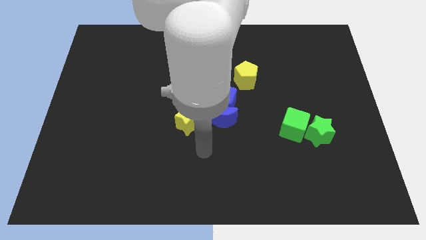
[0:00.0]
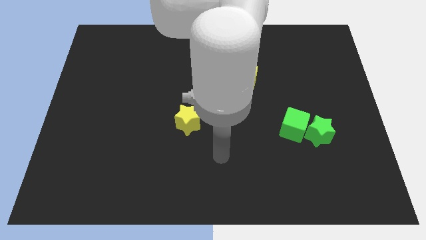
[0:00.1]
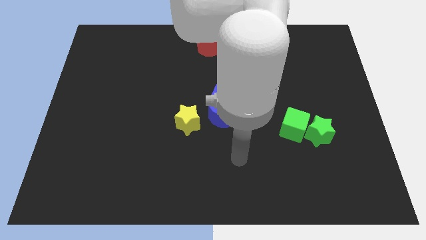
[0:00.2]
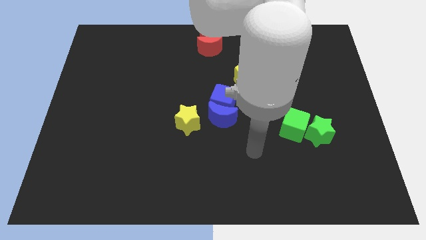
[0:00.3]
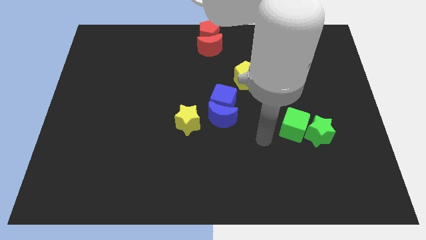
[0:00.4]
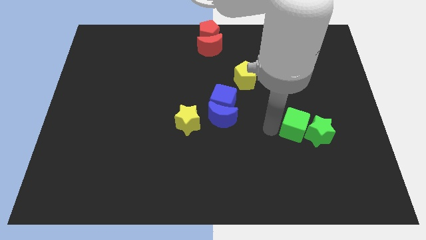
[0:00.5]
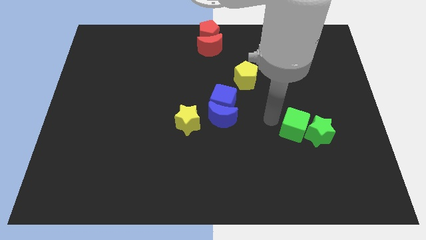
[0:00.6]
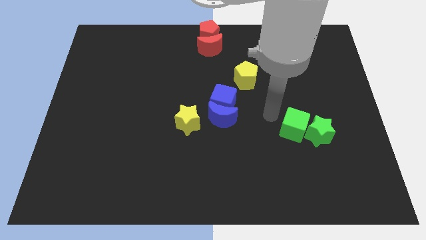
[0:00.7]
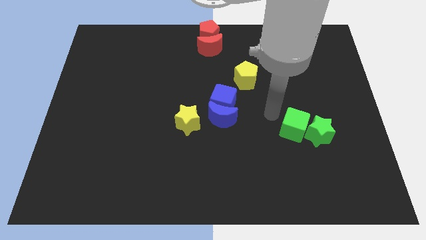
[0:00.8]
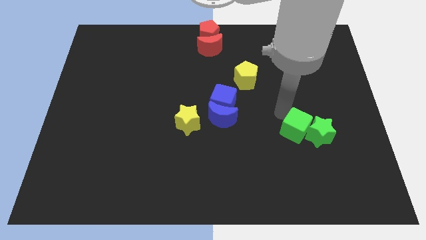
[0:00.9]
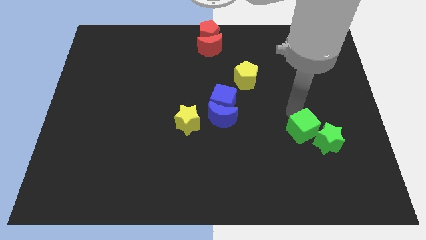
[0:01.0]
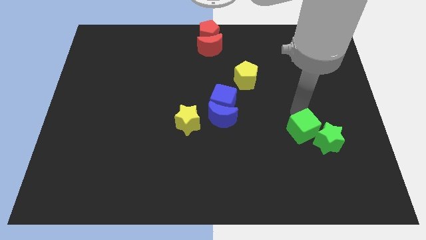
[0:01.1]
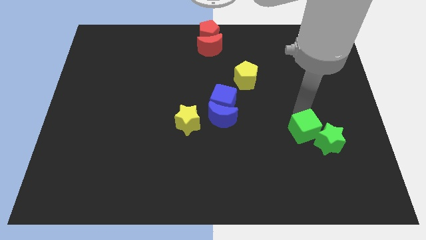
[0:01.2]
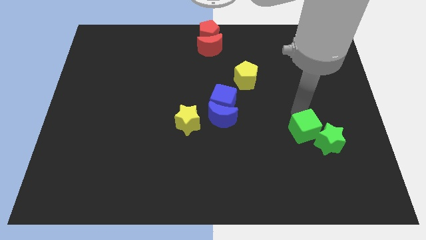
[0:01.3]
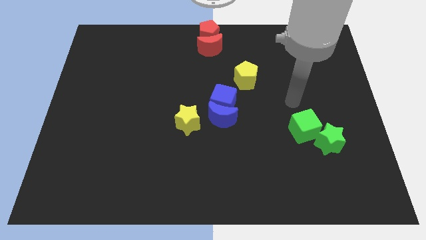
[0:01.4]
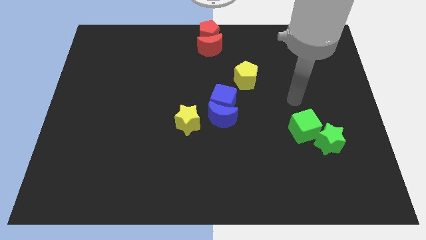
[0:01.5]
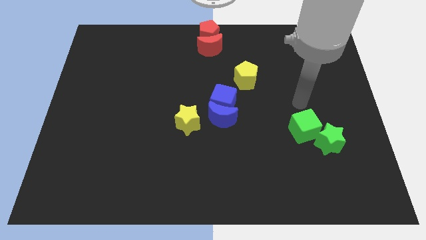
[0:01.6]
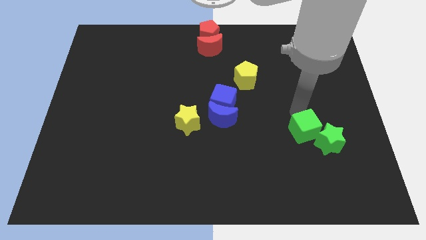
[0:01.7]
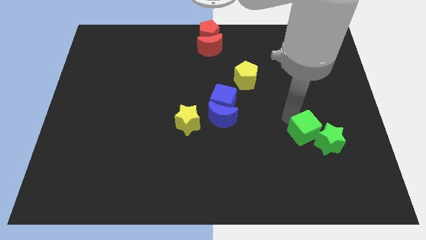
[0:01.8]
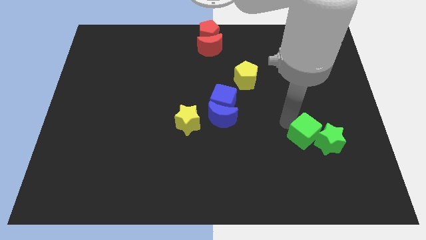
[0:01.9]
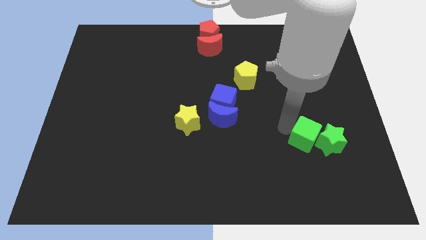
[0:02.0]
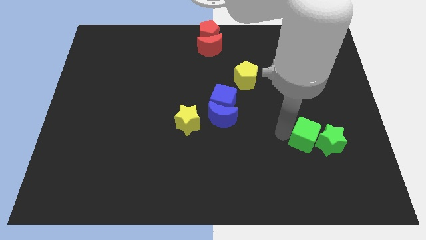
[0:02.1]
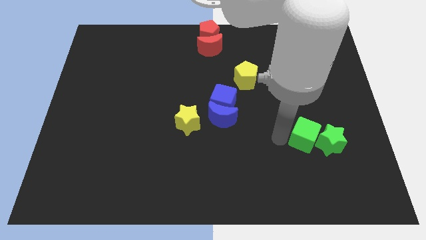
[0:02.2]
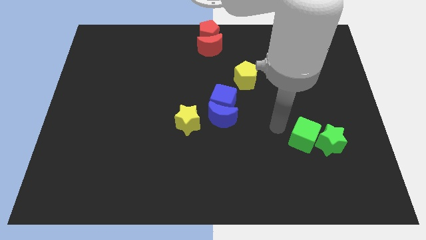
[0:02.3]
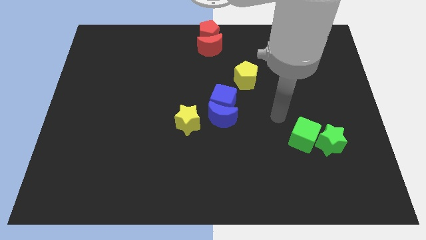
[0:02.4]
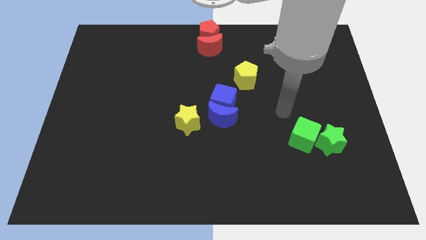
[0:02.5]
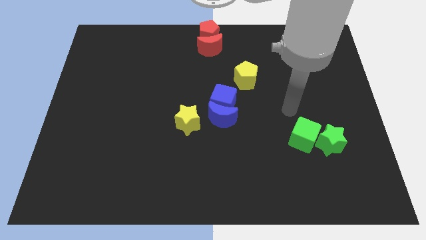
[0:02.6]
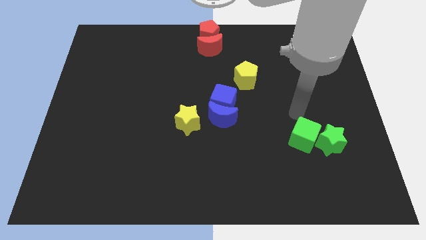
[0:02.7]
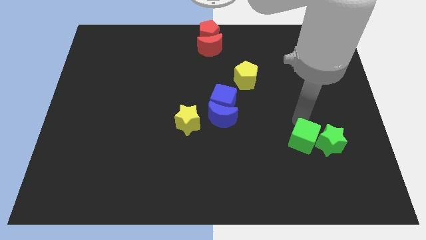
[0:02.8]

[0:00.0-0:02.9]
push the green cube and green star towards the right side of the board

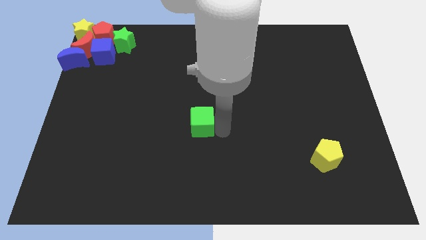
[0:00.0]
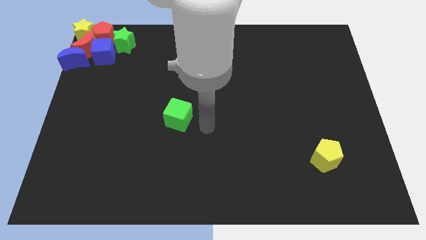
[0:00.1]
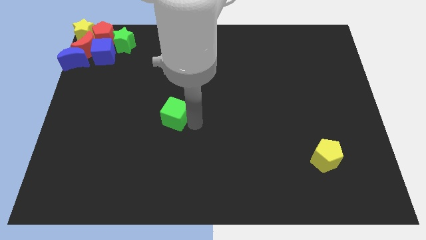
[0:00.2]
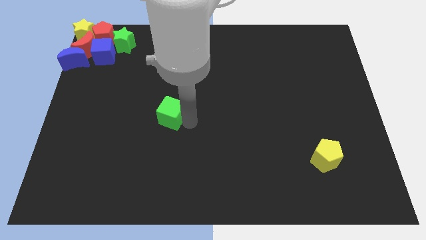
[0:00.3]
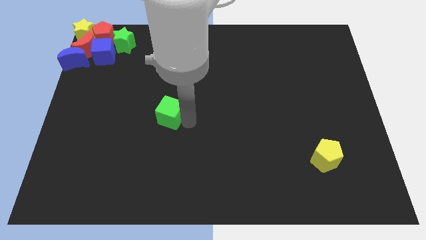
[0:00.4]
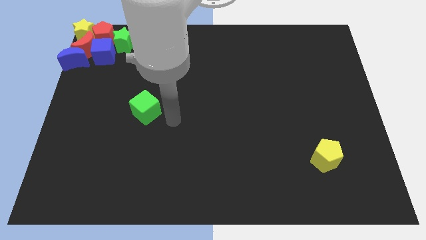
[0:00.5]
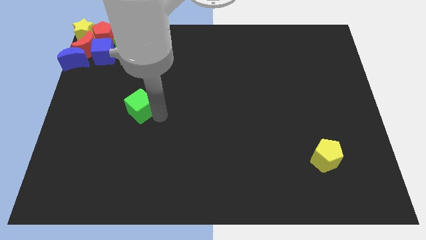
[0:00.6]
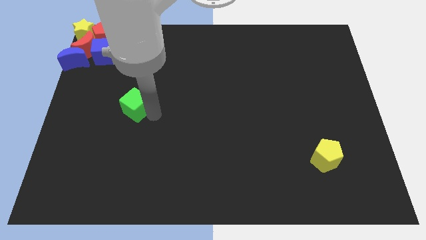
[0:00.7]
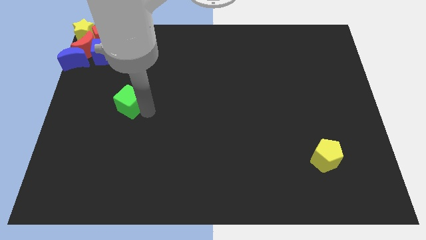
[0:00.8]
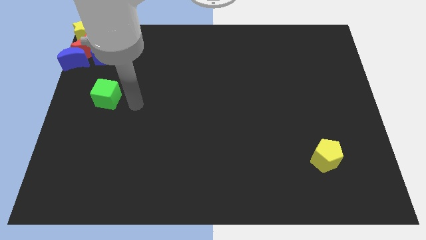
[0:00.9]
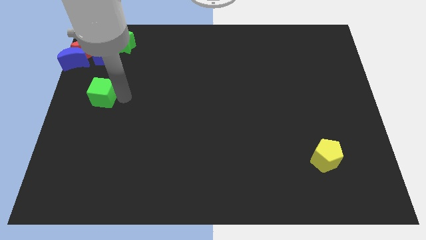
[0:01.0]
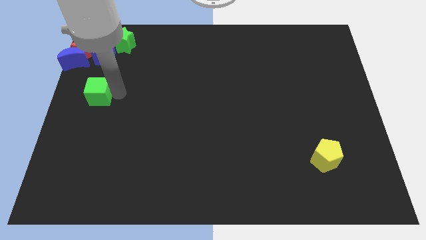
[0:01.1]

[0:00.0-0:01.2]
push the green cube to the bottom of the blue cube

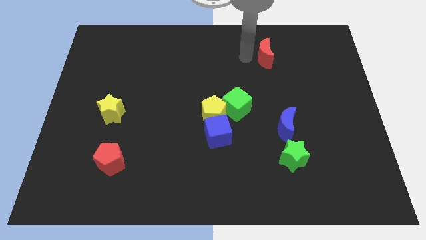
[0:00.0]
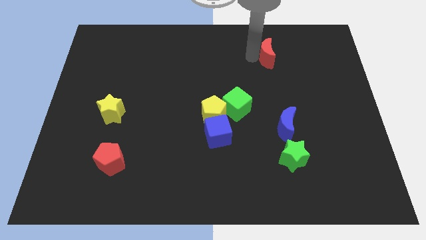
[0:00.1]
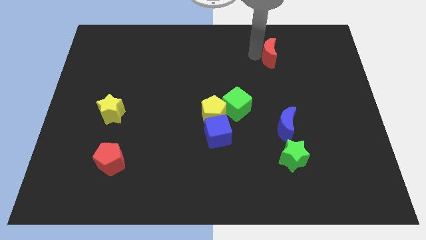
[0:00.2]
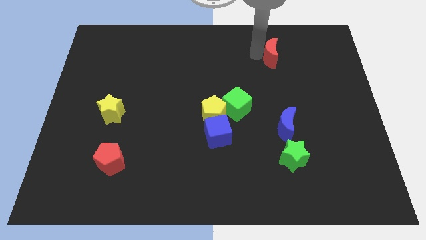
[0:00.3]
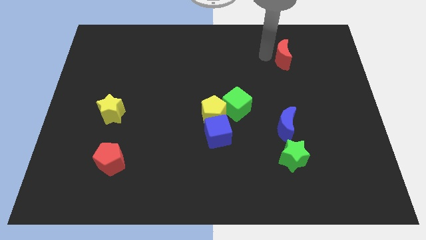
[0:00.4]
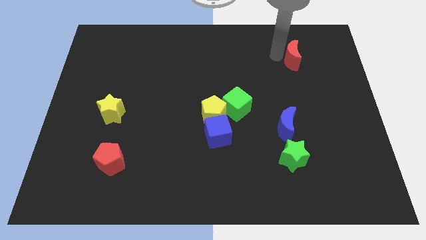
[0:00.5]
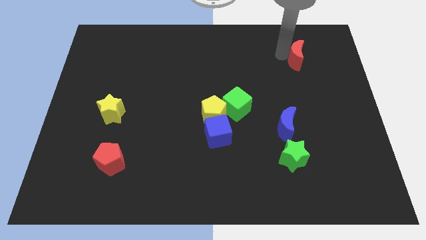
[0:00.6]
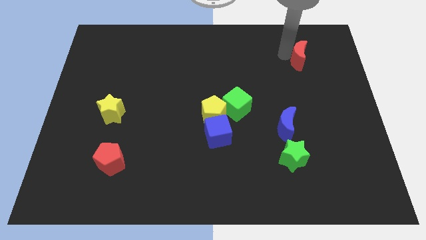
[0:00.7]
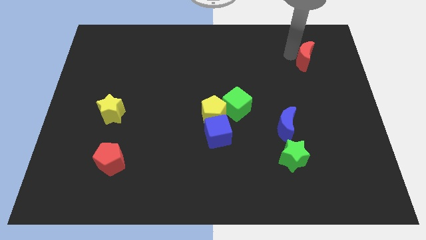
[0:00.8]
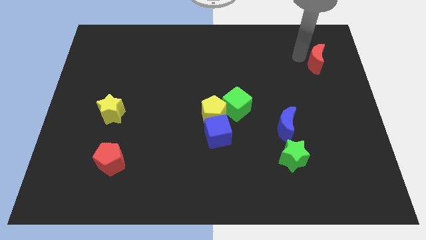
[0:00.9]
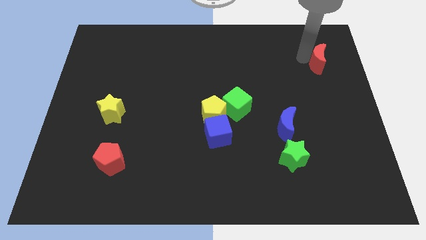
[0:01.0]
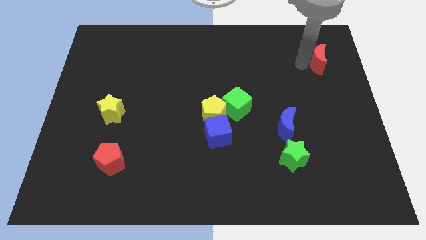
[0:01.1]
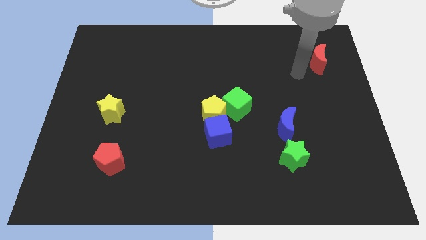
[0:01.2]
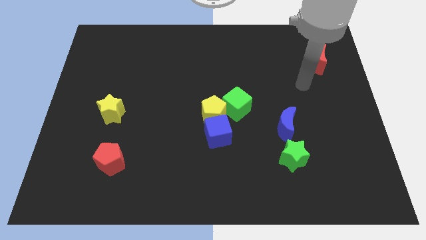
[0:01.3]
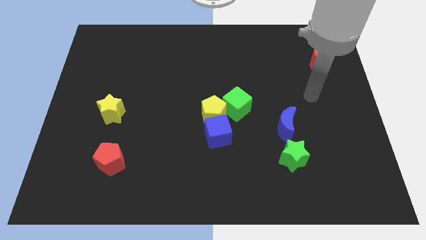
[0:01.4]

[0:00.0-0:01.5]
push the red moon to the top right of the board

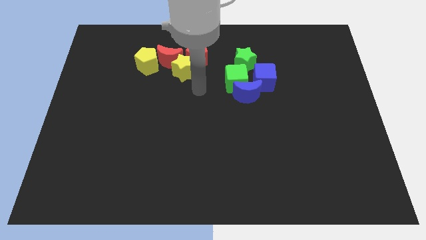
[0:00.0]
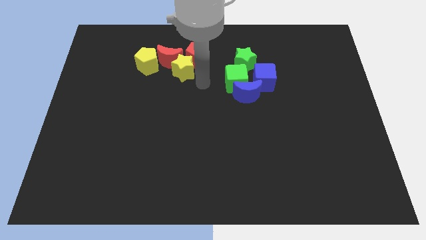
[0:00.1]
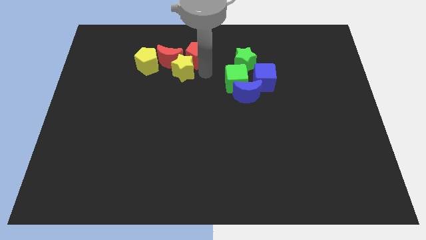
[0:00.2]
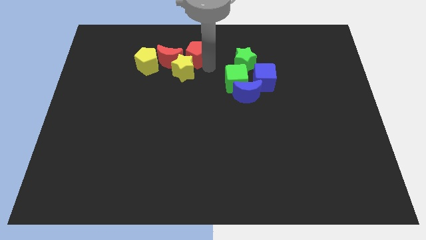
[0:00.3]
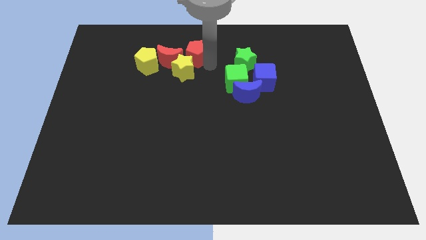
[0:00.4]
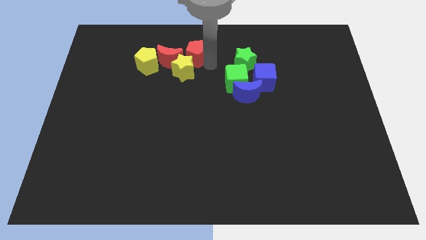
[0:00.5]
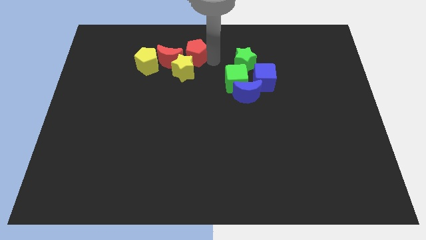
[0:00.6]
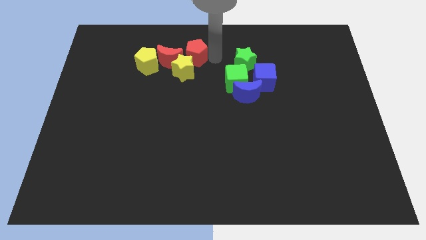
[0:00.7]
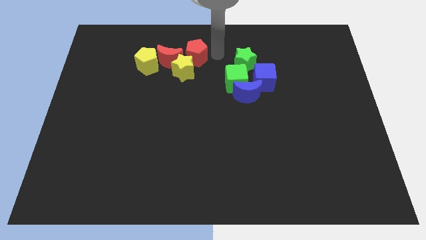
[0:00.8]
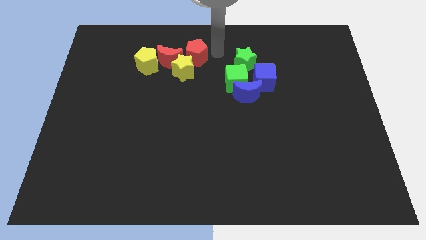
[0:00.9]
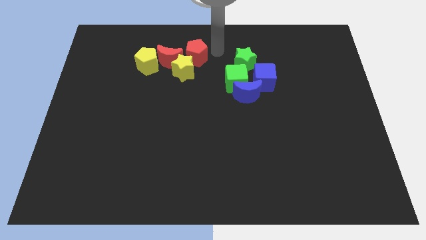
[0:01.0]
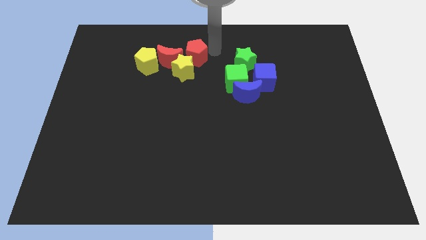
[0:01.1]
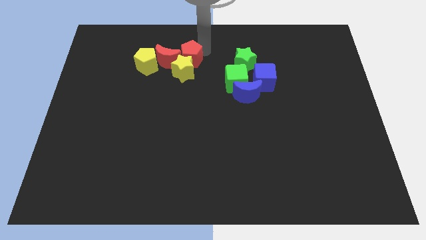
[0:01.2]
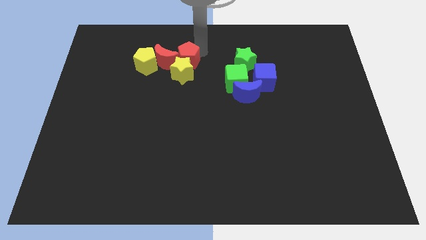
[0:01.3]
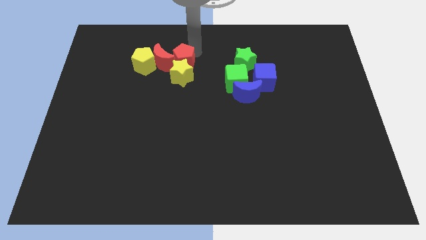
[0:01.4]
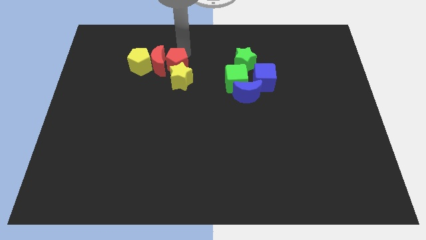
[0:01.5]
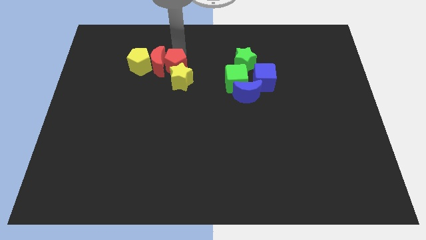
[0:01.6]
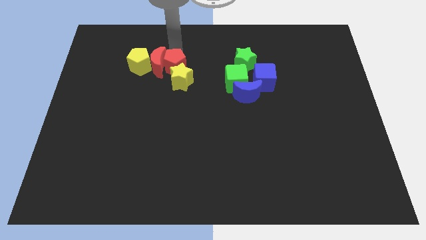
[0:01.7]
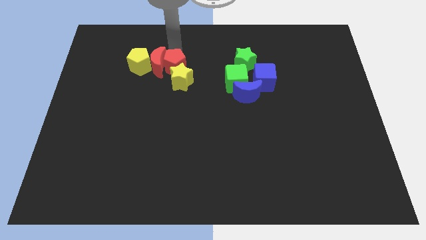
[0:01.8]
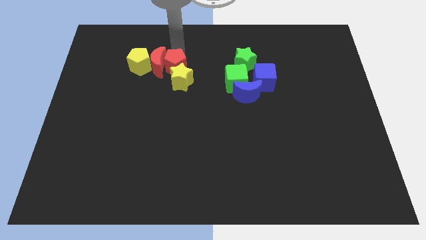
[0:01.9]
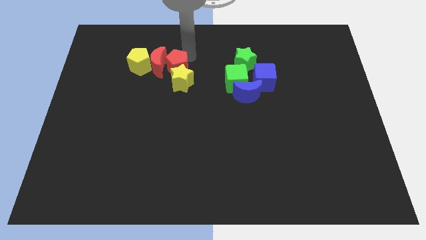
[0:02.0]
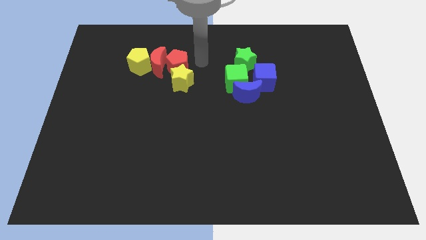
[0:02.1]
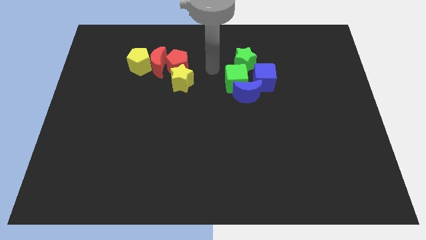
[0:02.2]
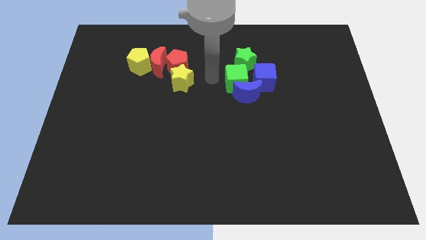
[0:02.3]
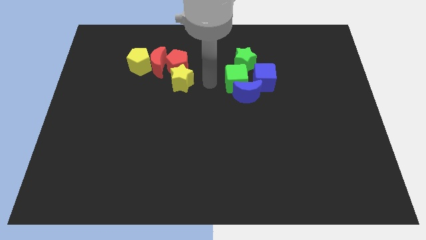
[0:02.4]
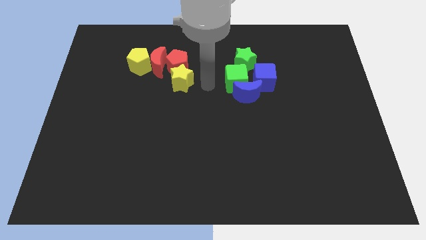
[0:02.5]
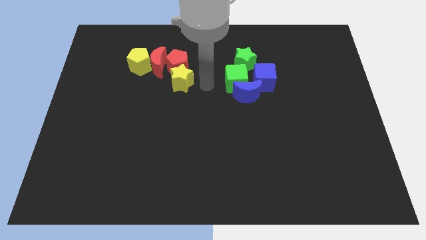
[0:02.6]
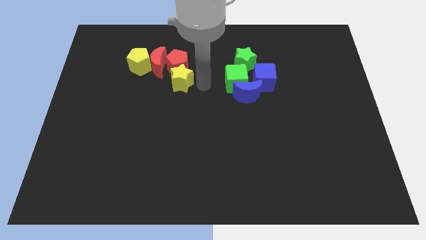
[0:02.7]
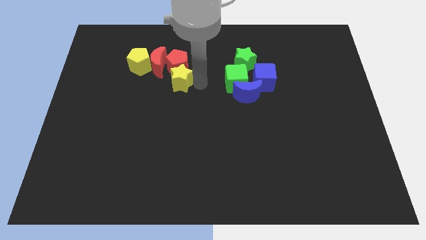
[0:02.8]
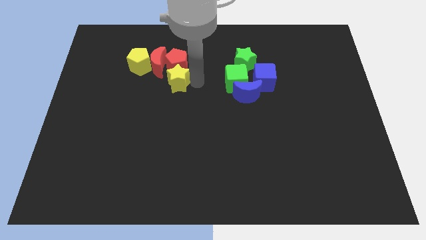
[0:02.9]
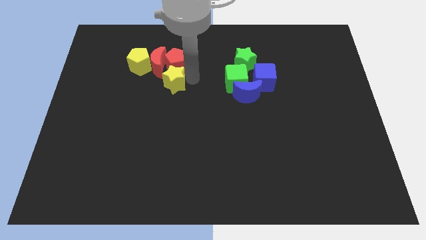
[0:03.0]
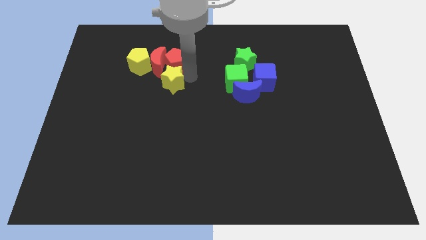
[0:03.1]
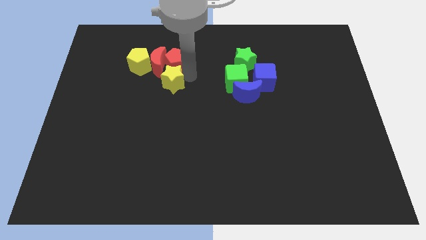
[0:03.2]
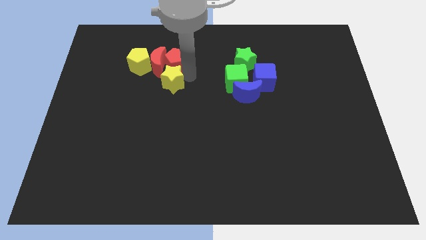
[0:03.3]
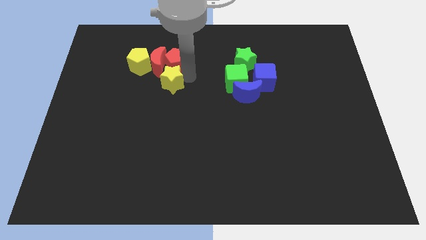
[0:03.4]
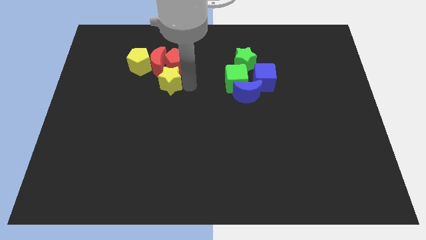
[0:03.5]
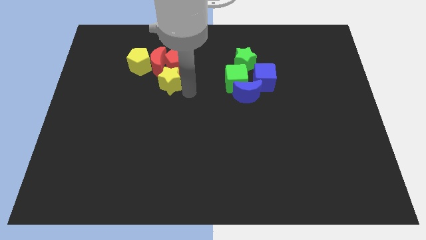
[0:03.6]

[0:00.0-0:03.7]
move the red pentagon into red moon
